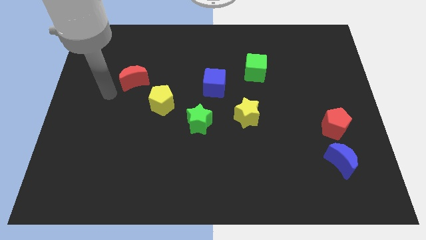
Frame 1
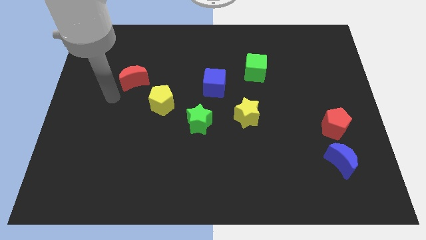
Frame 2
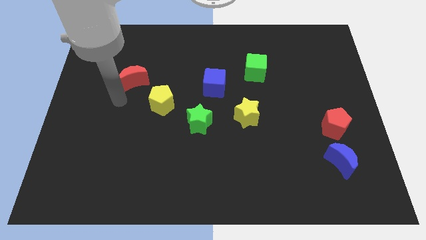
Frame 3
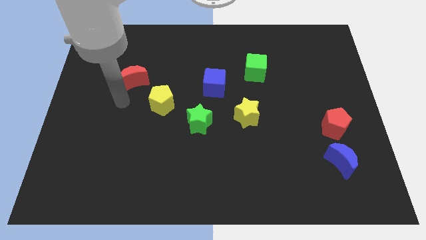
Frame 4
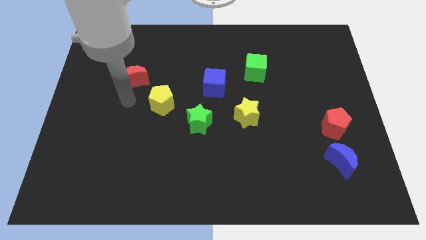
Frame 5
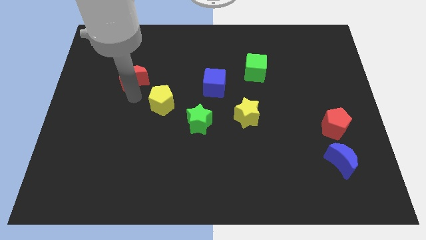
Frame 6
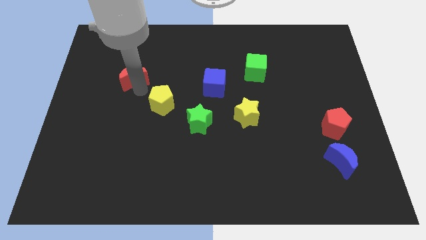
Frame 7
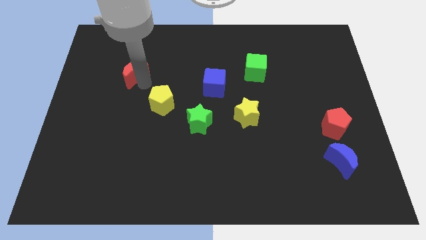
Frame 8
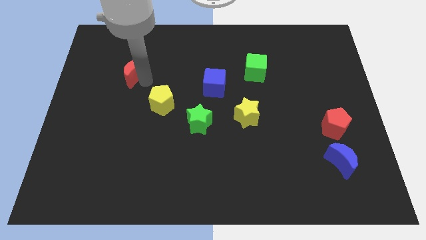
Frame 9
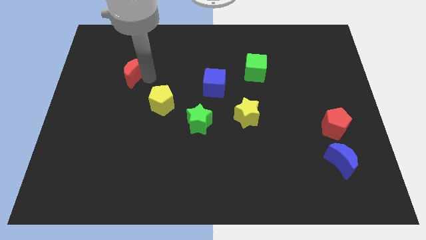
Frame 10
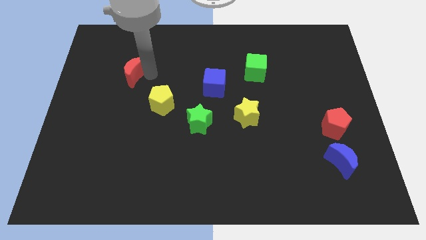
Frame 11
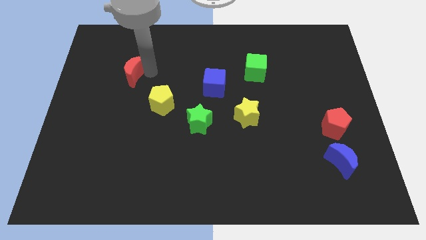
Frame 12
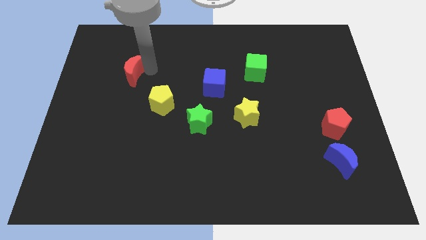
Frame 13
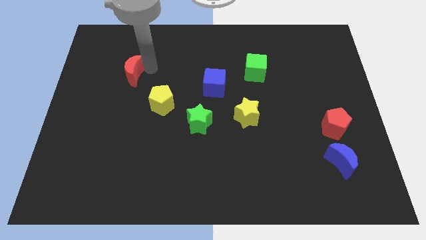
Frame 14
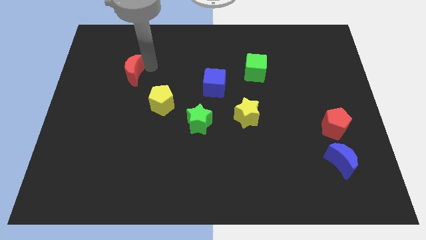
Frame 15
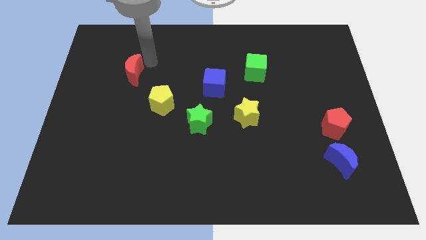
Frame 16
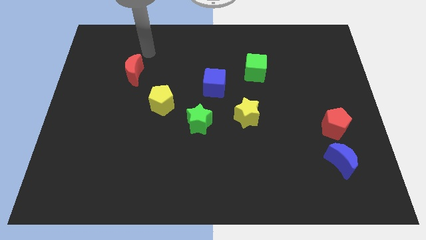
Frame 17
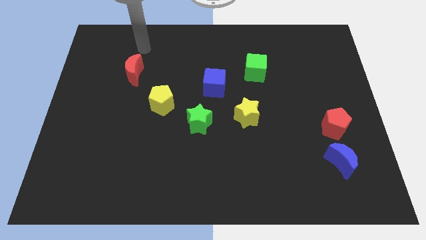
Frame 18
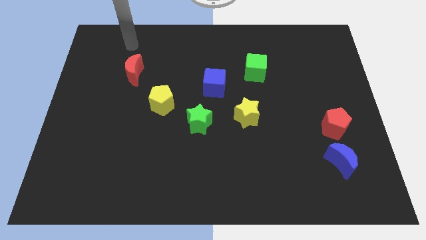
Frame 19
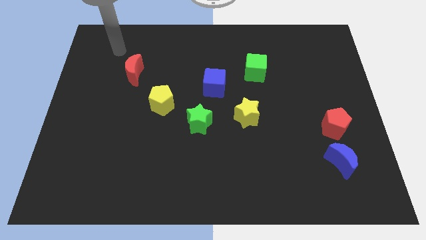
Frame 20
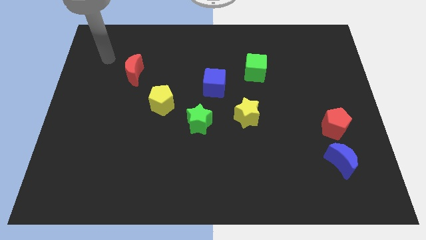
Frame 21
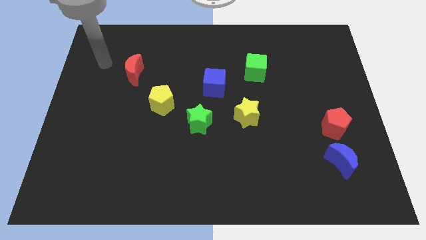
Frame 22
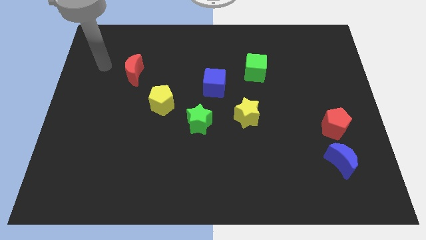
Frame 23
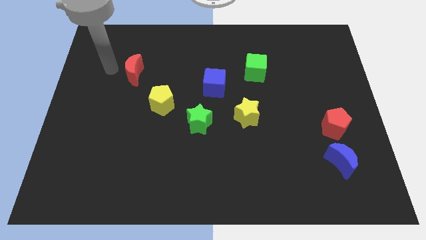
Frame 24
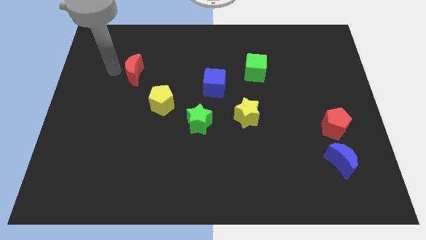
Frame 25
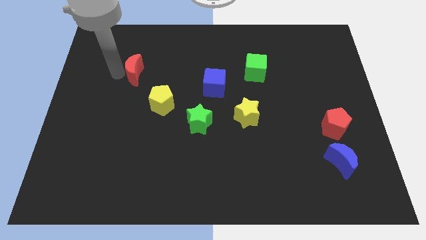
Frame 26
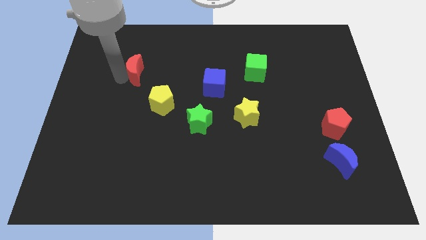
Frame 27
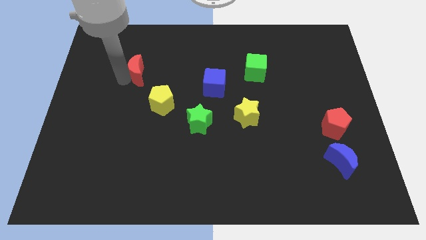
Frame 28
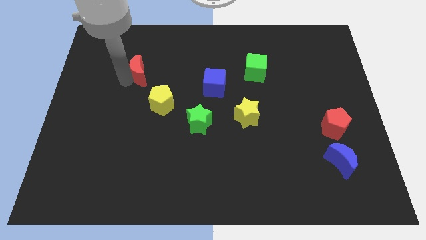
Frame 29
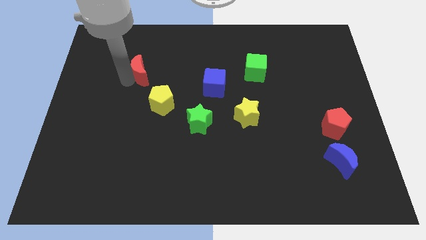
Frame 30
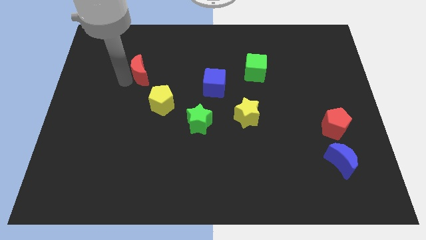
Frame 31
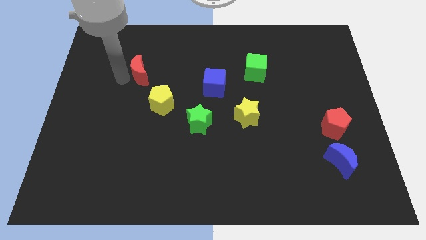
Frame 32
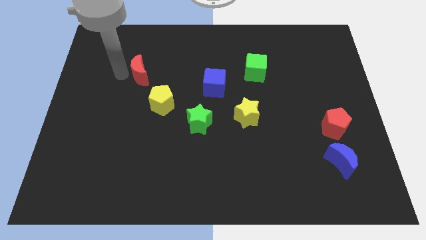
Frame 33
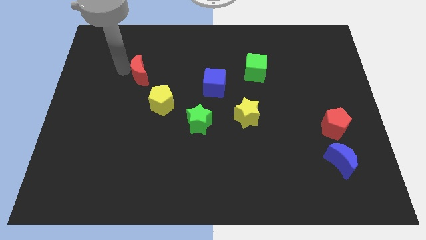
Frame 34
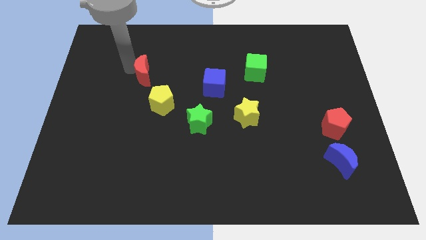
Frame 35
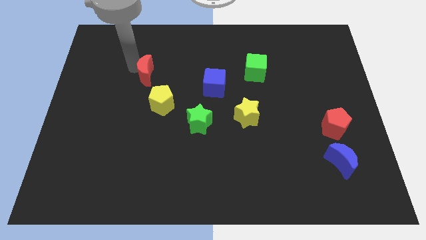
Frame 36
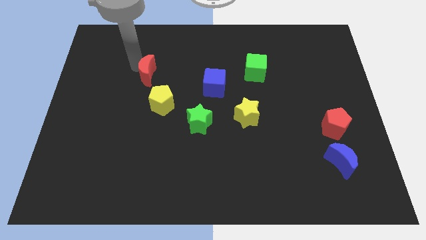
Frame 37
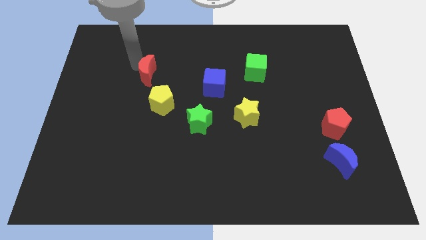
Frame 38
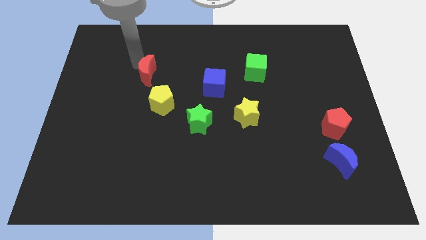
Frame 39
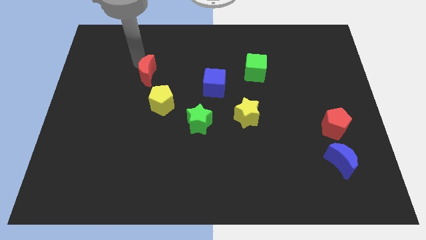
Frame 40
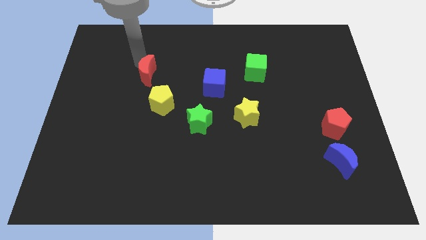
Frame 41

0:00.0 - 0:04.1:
push the red crescent to the top of the yellow pentagon

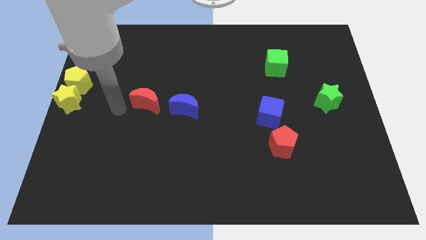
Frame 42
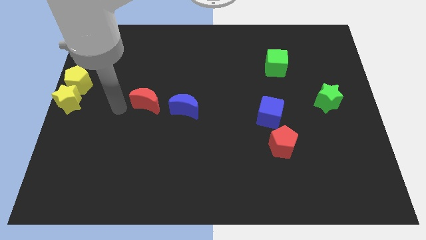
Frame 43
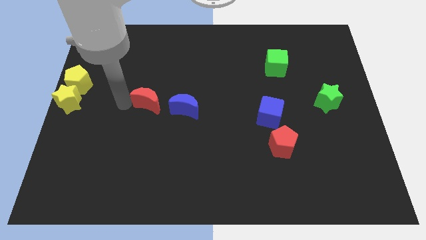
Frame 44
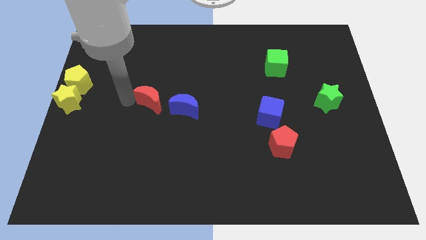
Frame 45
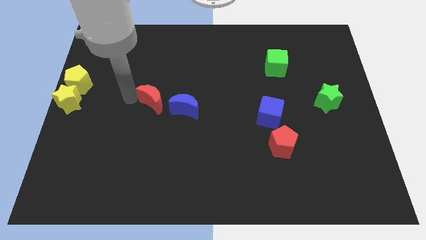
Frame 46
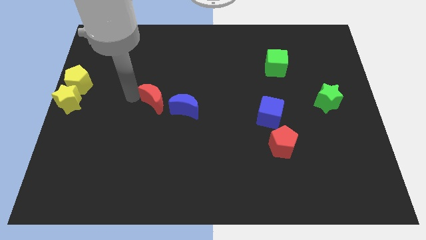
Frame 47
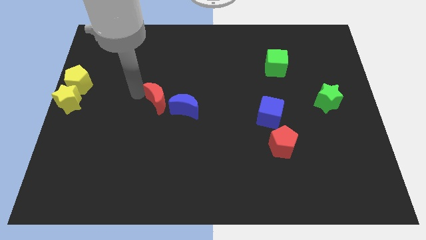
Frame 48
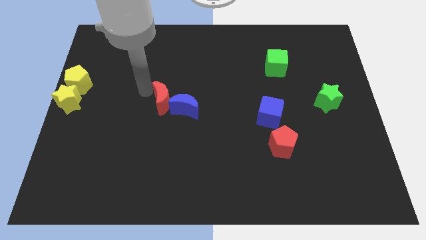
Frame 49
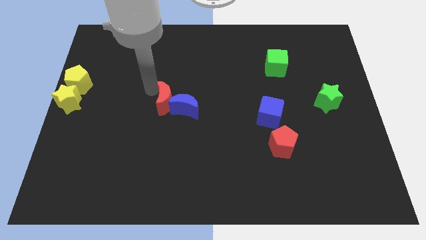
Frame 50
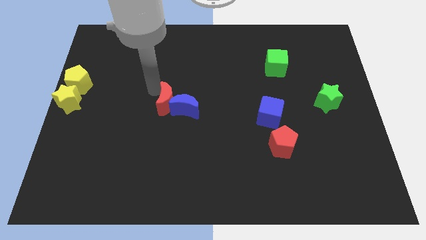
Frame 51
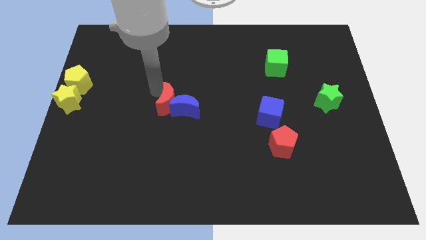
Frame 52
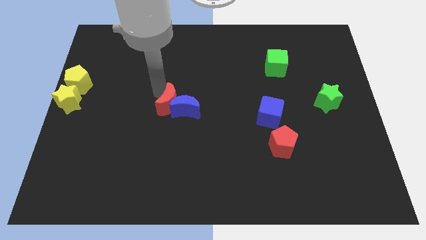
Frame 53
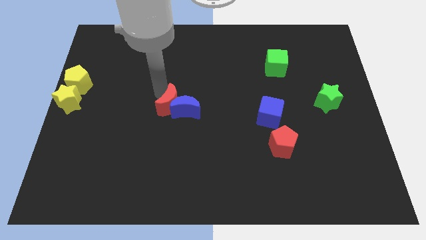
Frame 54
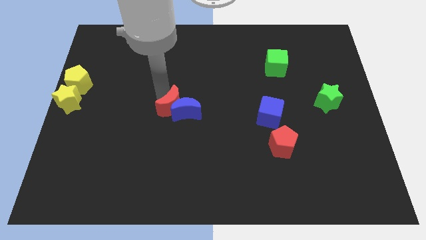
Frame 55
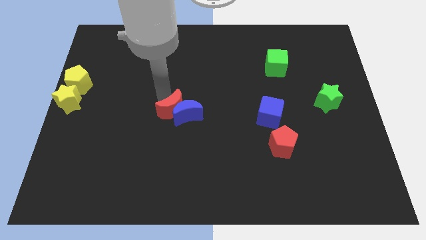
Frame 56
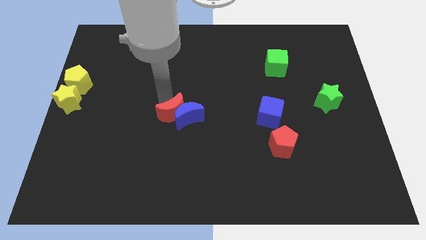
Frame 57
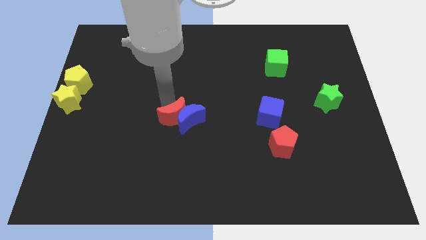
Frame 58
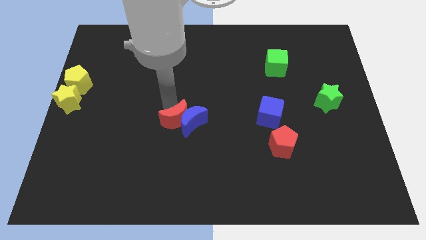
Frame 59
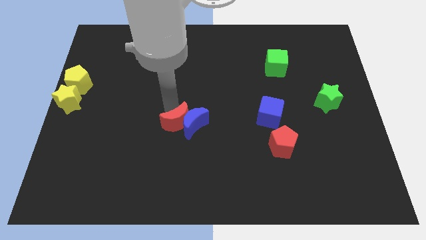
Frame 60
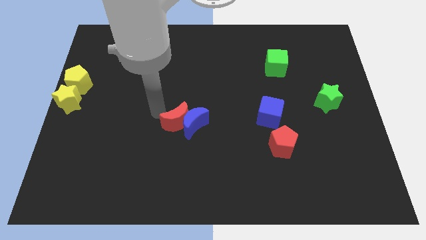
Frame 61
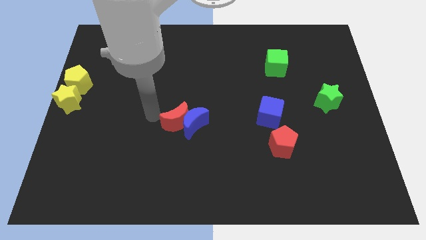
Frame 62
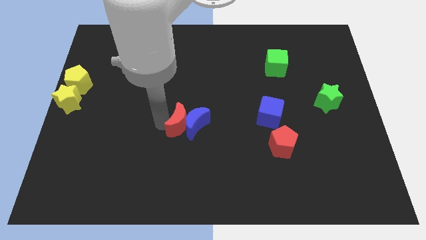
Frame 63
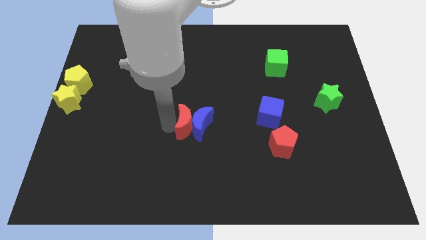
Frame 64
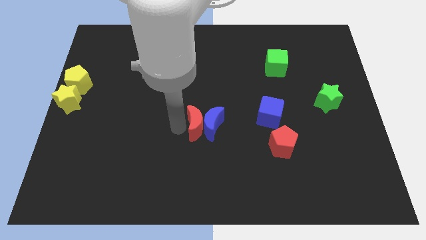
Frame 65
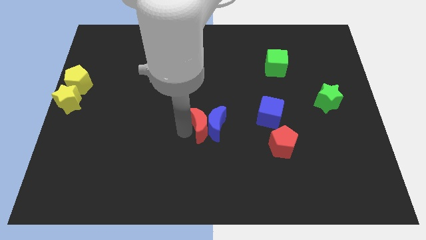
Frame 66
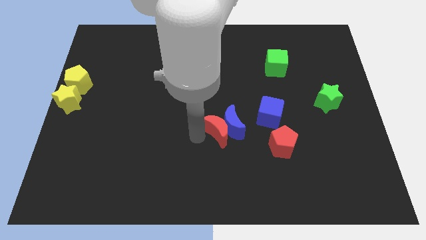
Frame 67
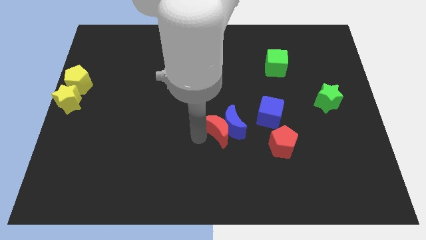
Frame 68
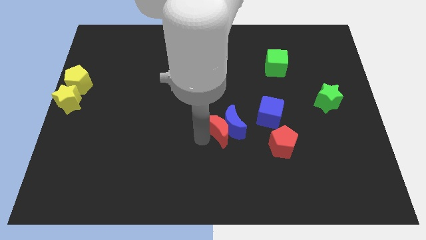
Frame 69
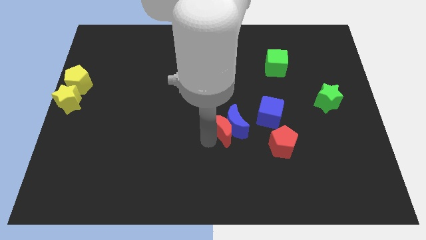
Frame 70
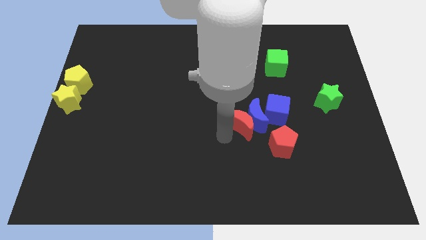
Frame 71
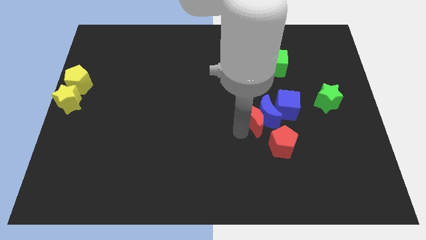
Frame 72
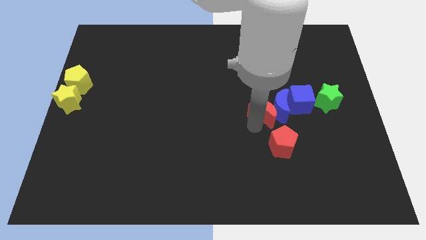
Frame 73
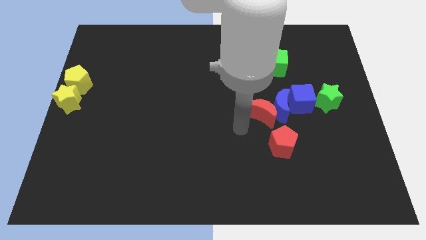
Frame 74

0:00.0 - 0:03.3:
push the red moon and blue moon into the blue cube

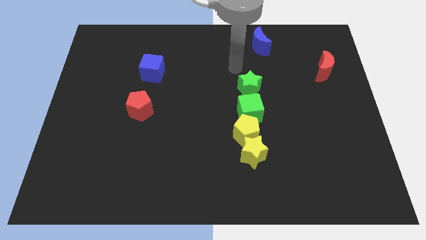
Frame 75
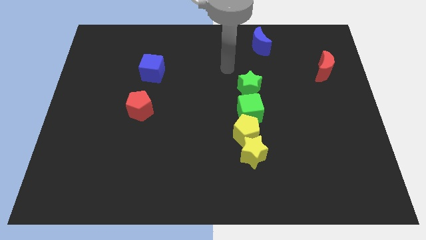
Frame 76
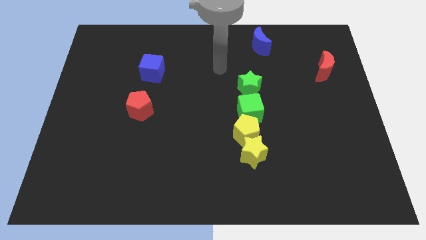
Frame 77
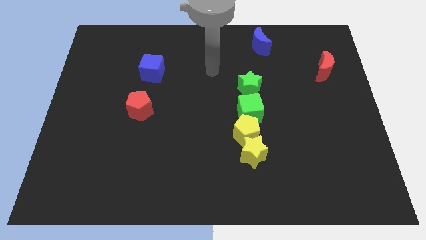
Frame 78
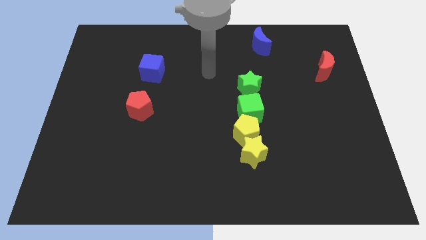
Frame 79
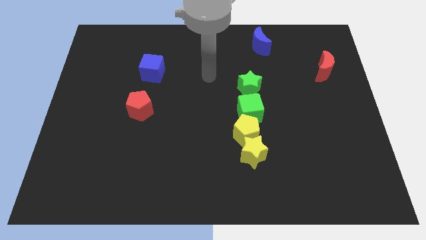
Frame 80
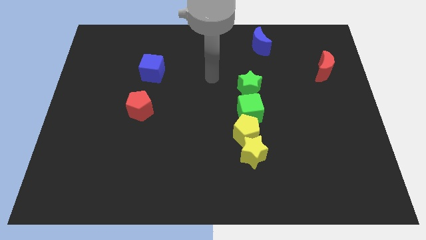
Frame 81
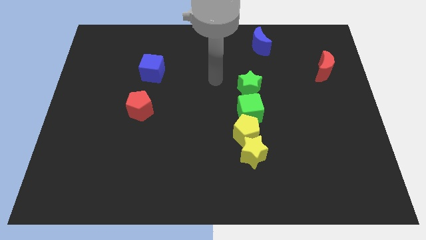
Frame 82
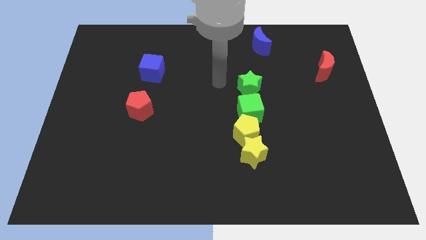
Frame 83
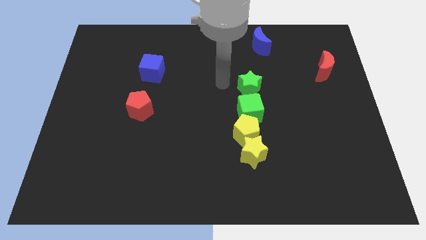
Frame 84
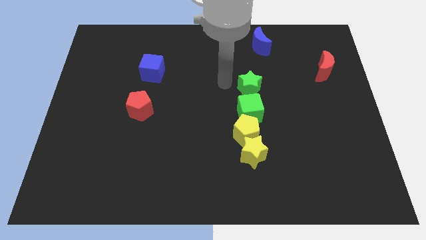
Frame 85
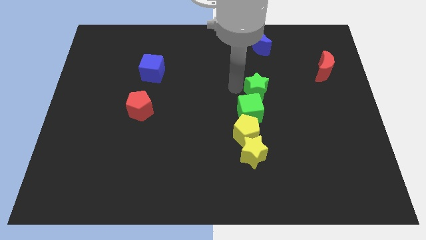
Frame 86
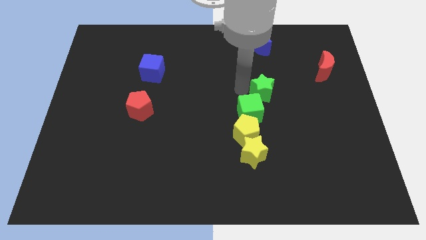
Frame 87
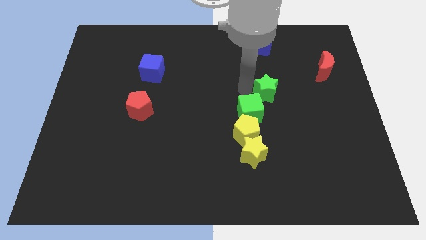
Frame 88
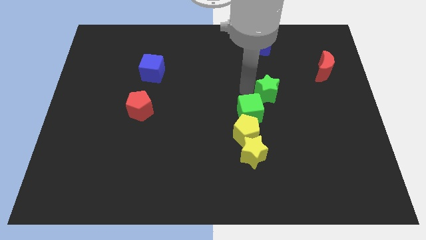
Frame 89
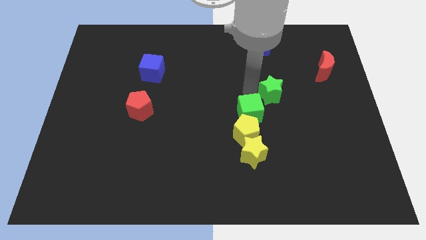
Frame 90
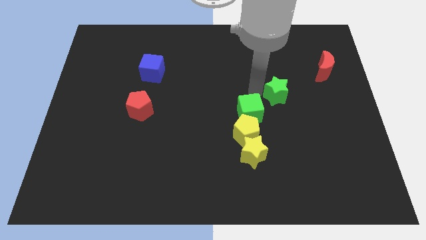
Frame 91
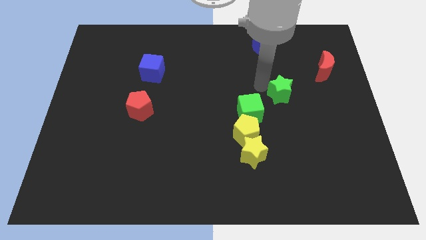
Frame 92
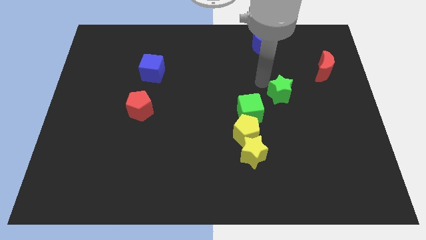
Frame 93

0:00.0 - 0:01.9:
separate the green star from the green cube
